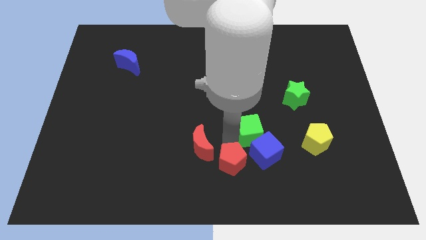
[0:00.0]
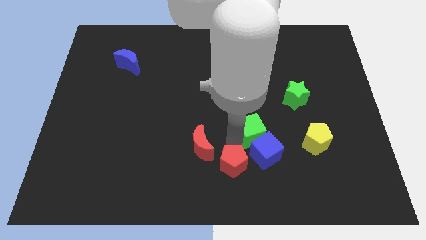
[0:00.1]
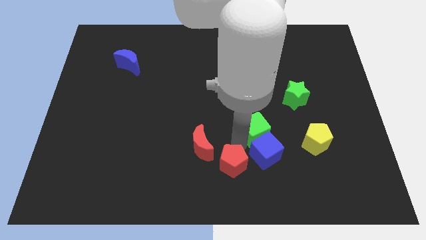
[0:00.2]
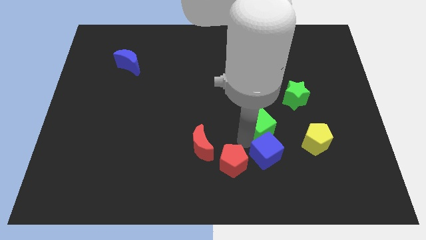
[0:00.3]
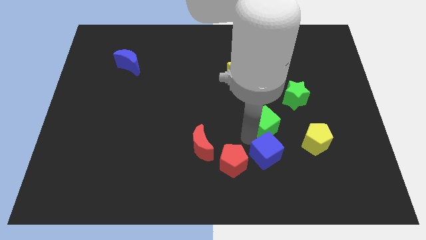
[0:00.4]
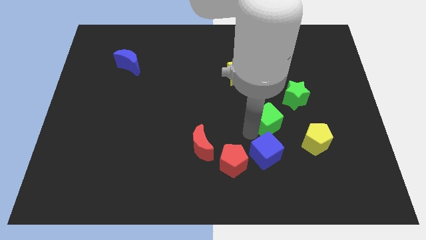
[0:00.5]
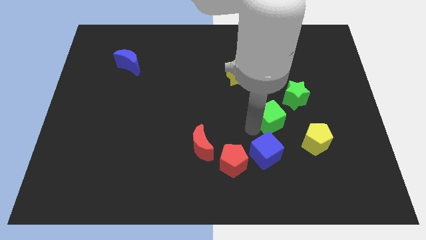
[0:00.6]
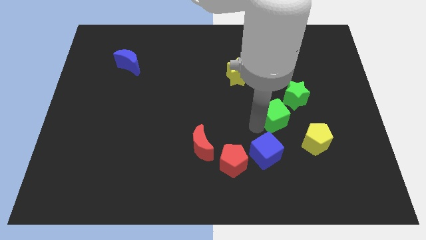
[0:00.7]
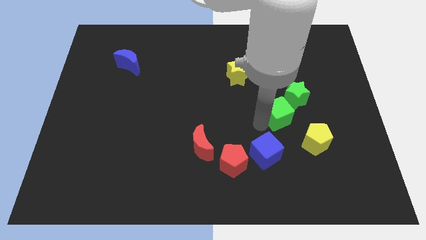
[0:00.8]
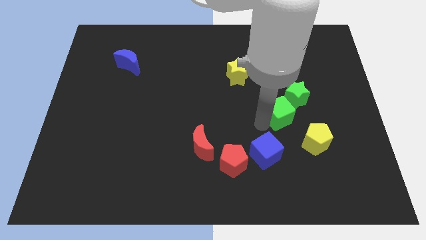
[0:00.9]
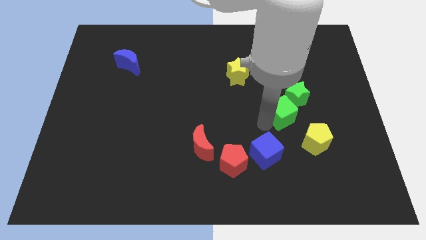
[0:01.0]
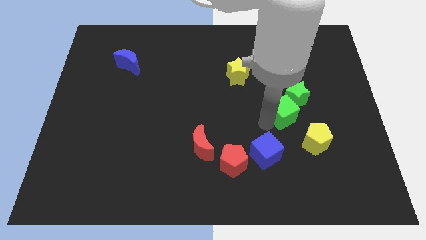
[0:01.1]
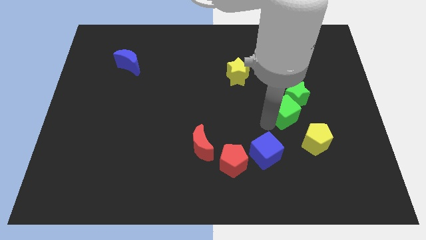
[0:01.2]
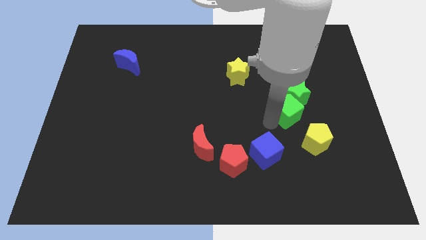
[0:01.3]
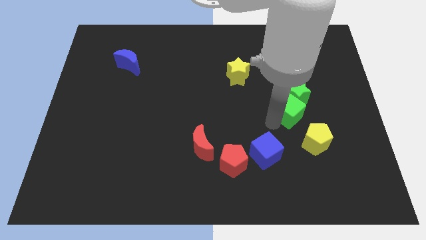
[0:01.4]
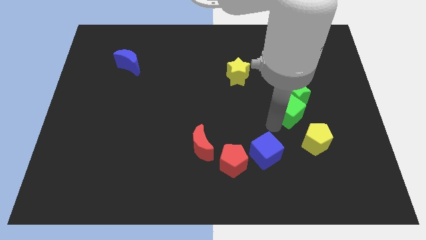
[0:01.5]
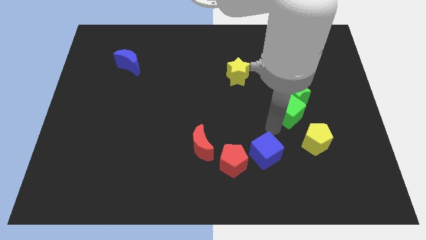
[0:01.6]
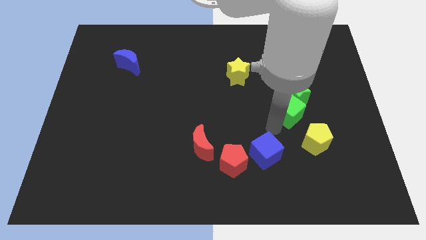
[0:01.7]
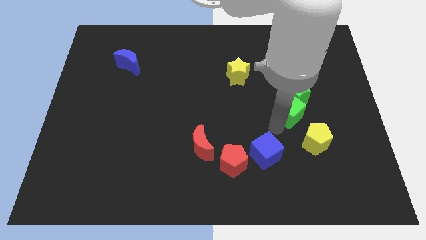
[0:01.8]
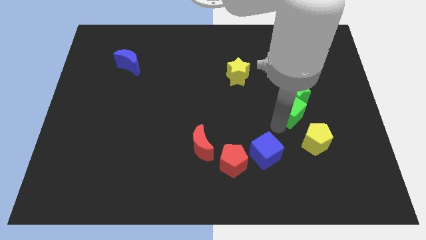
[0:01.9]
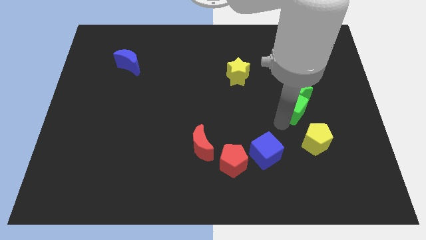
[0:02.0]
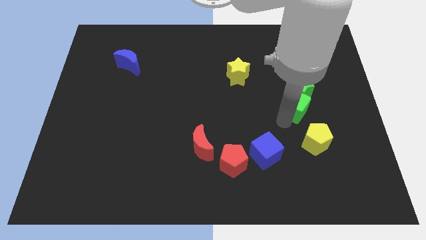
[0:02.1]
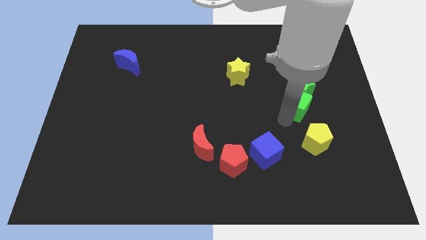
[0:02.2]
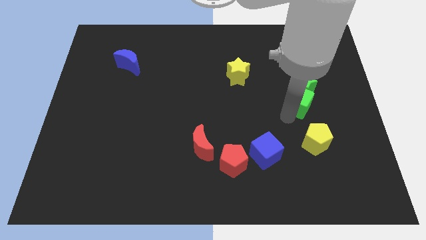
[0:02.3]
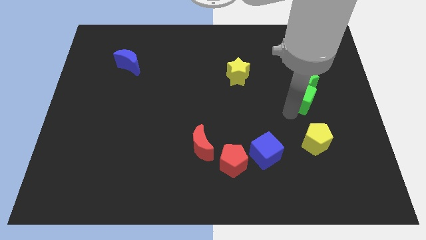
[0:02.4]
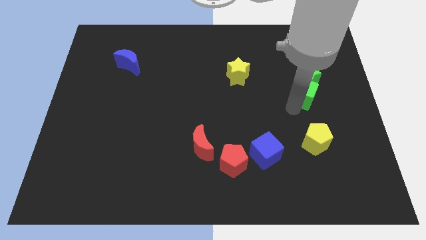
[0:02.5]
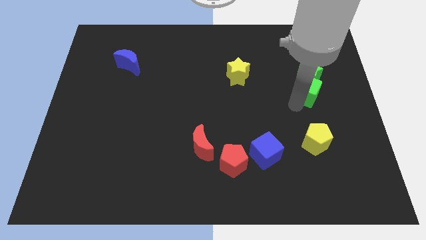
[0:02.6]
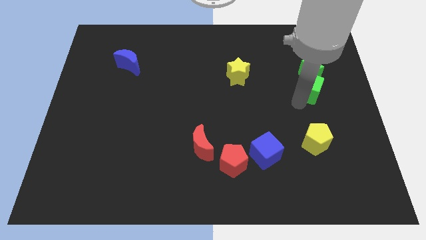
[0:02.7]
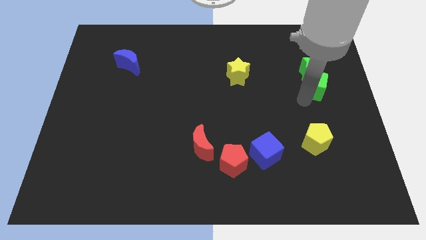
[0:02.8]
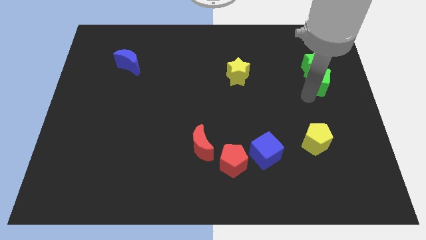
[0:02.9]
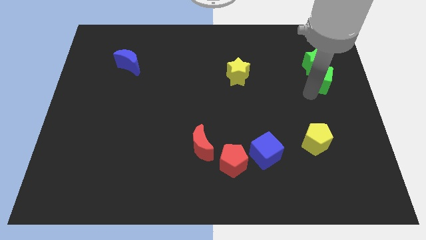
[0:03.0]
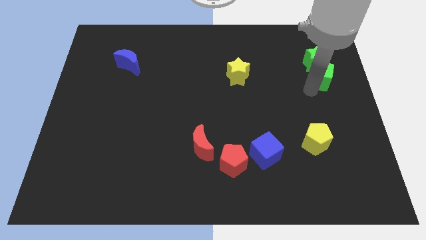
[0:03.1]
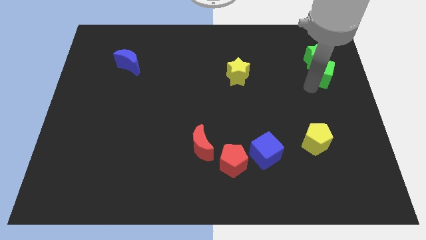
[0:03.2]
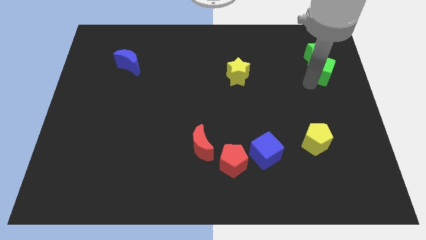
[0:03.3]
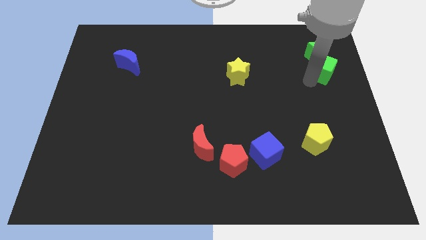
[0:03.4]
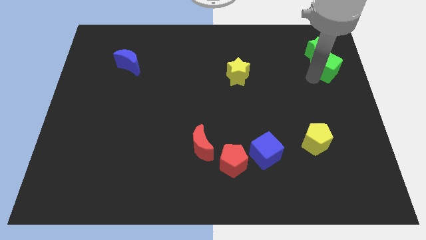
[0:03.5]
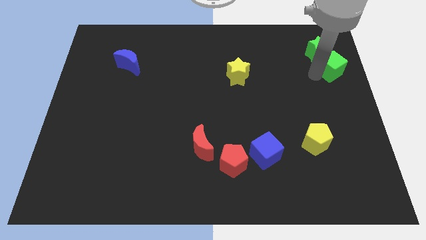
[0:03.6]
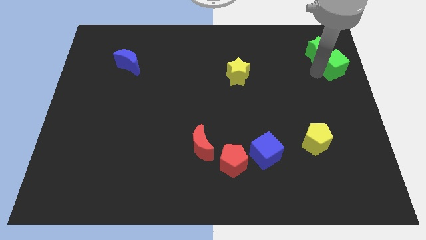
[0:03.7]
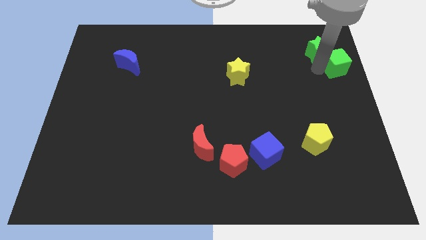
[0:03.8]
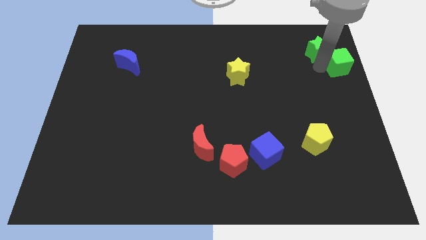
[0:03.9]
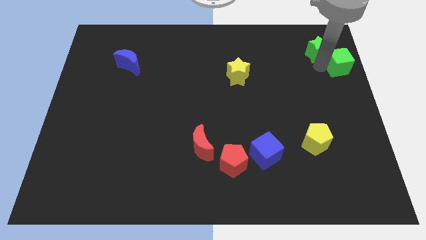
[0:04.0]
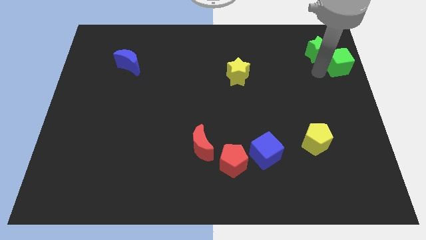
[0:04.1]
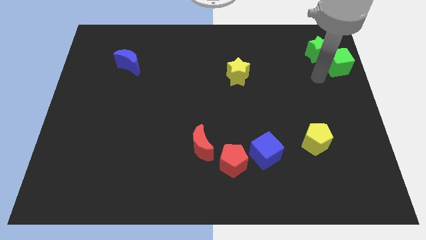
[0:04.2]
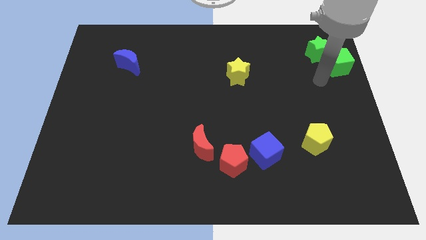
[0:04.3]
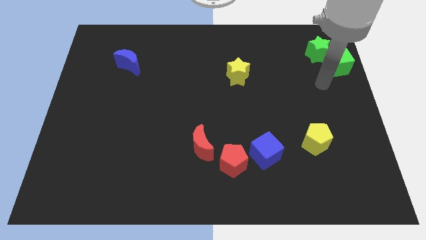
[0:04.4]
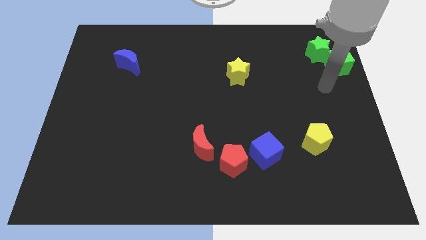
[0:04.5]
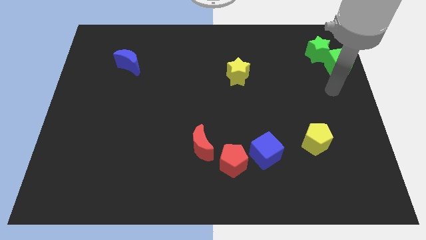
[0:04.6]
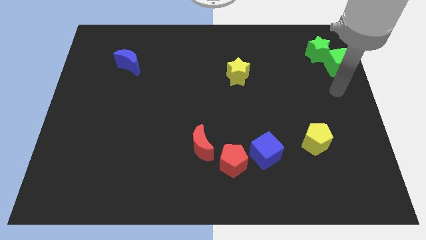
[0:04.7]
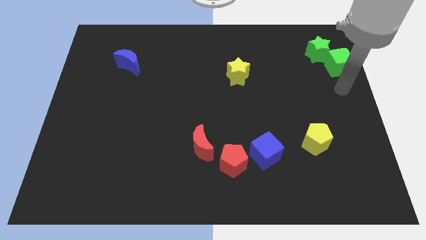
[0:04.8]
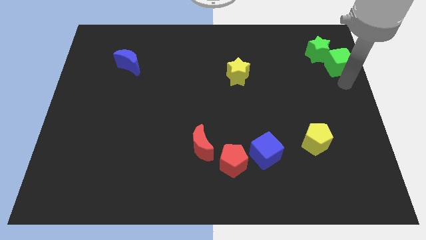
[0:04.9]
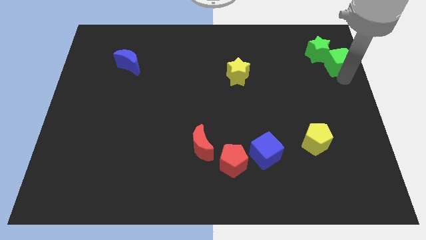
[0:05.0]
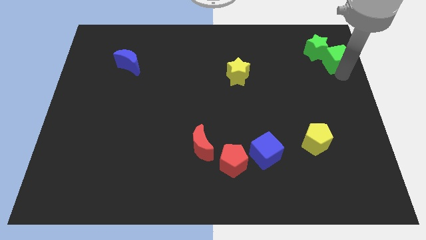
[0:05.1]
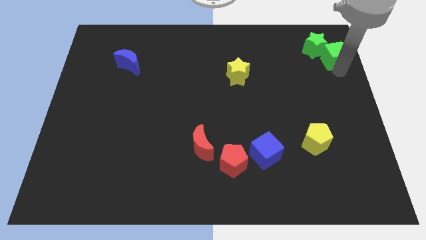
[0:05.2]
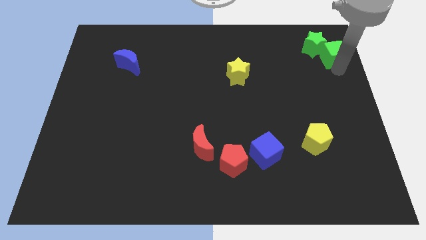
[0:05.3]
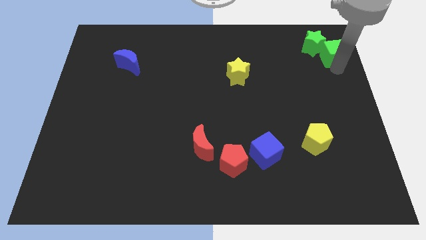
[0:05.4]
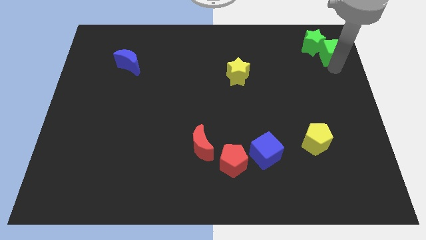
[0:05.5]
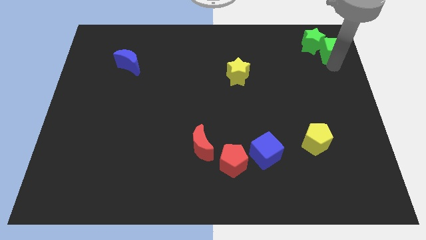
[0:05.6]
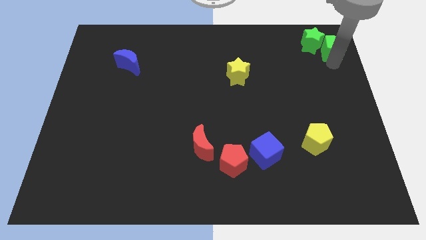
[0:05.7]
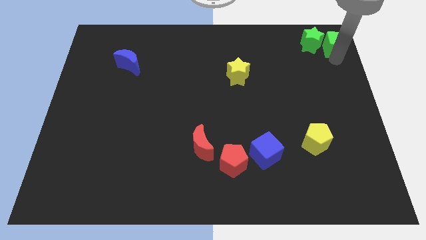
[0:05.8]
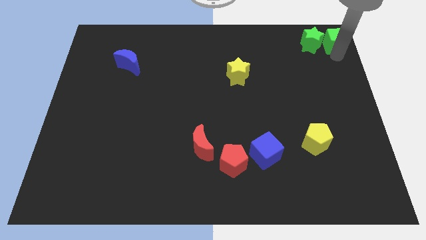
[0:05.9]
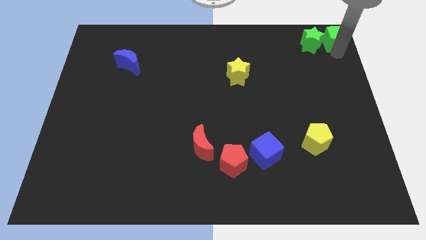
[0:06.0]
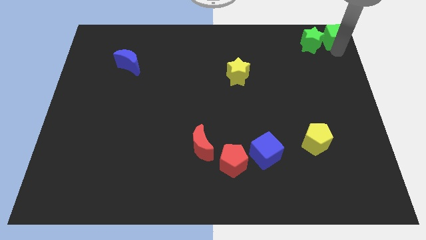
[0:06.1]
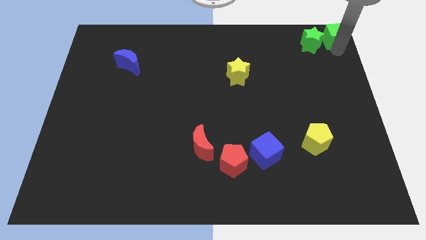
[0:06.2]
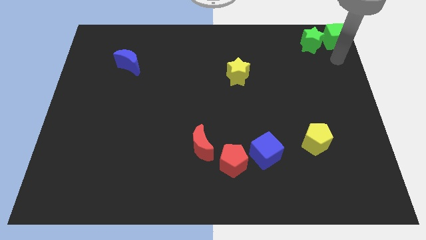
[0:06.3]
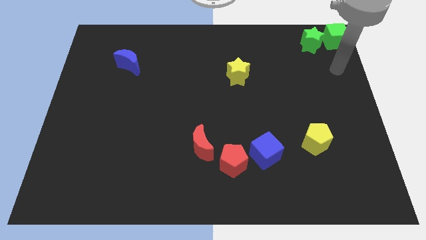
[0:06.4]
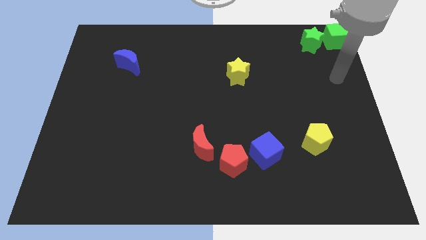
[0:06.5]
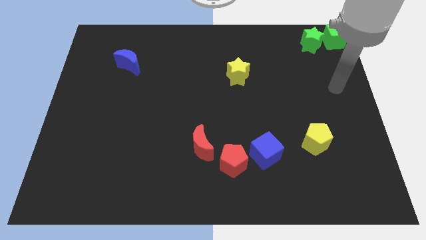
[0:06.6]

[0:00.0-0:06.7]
push the green cube and green star towards the top right corner of the board

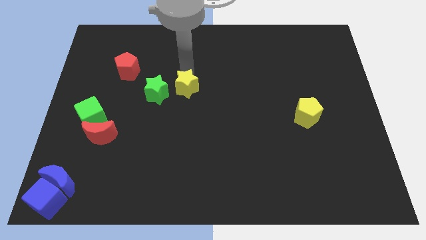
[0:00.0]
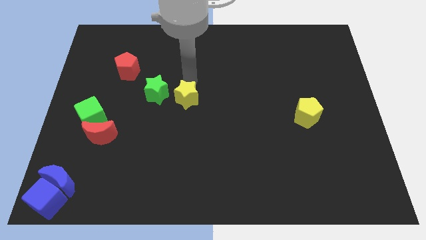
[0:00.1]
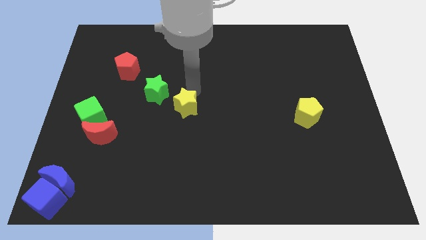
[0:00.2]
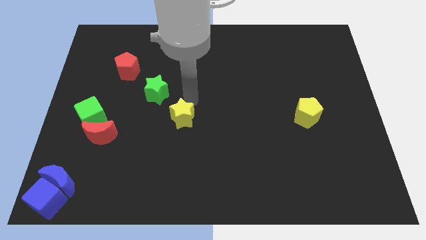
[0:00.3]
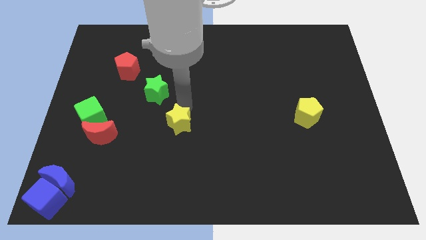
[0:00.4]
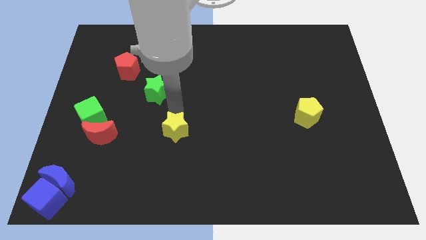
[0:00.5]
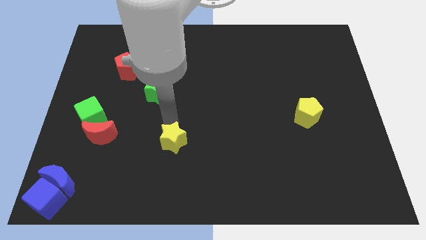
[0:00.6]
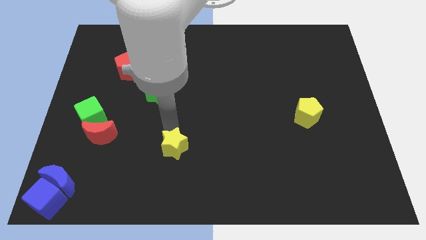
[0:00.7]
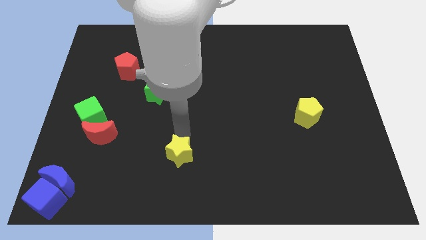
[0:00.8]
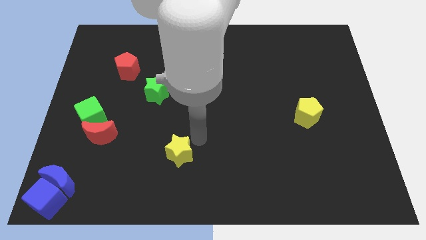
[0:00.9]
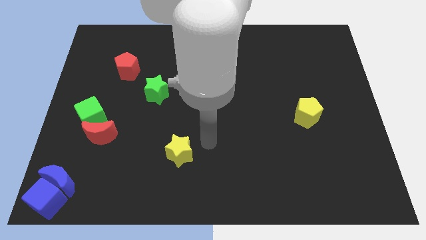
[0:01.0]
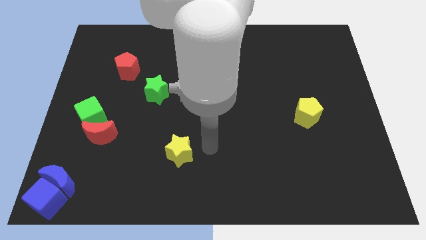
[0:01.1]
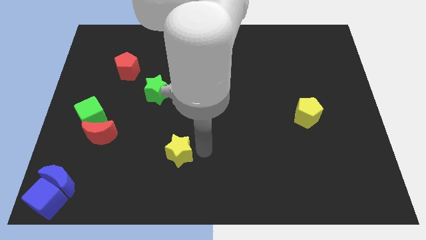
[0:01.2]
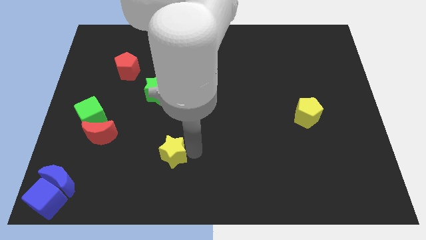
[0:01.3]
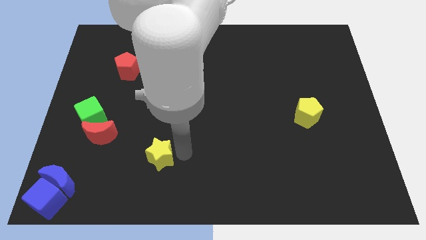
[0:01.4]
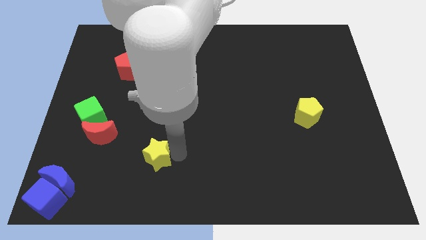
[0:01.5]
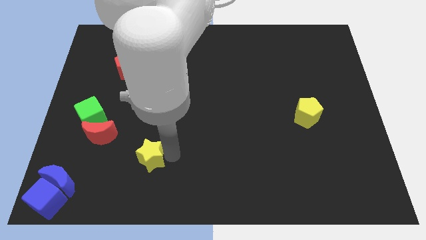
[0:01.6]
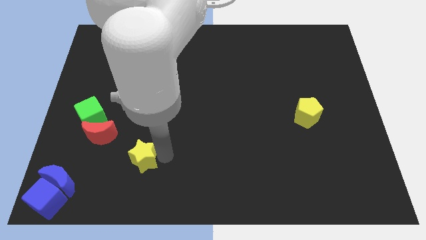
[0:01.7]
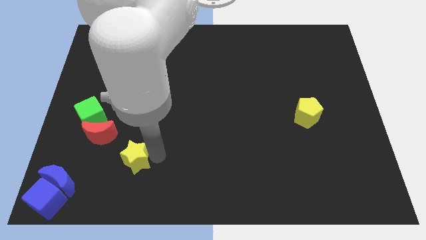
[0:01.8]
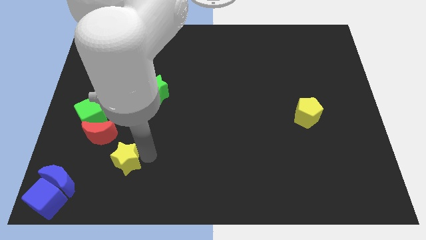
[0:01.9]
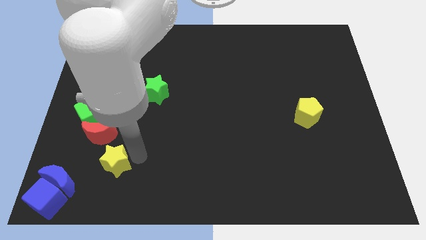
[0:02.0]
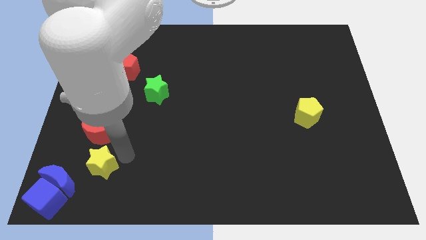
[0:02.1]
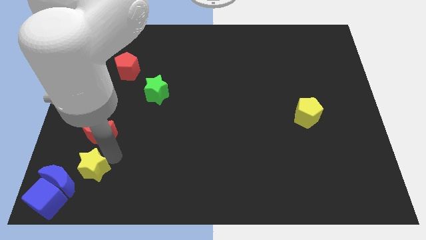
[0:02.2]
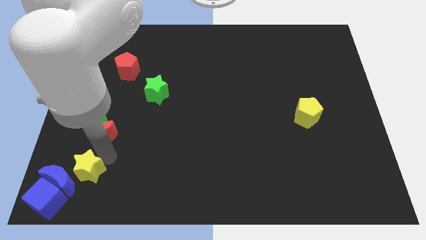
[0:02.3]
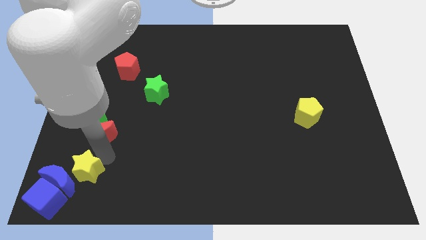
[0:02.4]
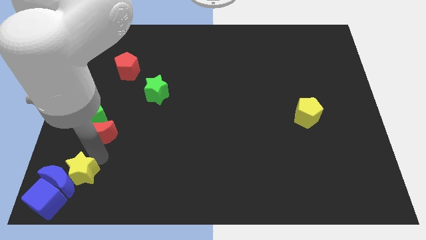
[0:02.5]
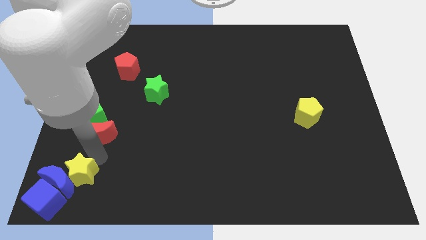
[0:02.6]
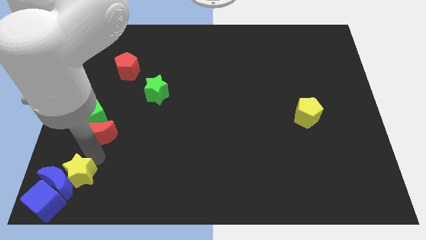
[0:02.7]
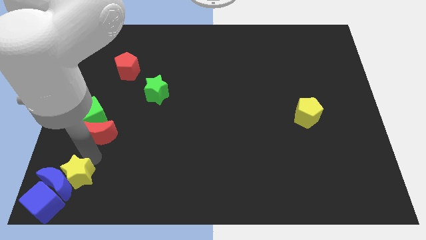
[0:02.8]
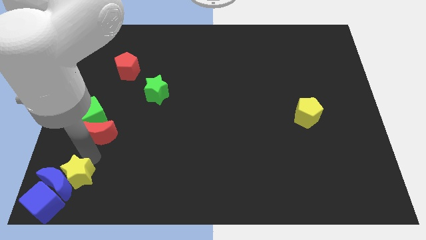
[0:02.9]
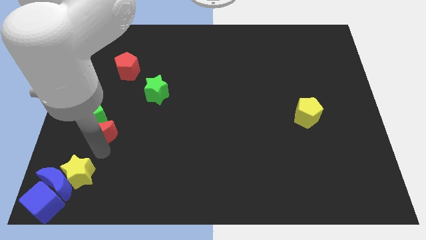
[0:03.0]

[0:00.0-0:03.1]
move the yellow star to the top right to the blue crescent
